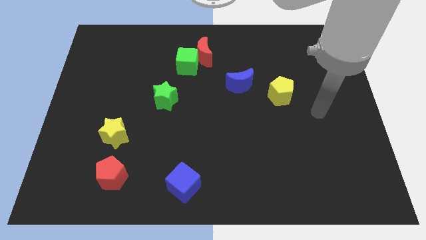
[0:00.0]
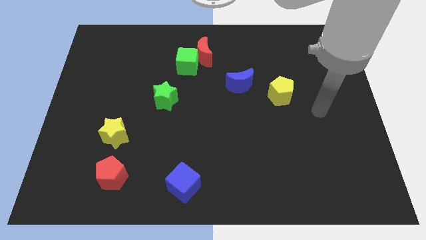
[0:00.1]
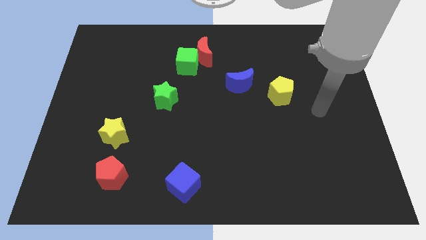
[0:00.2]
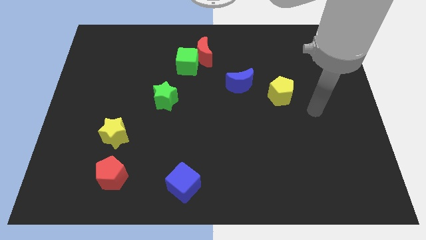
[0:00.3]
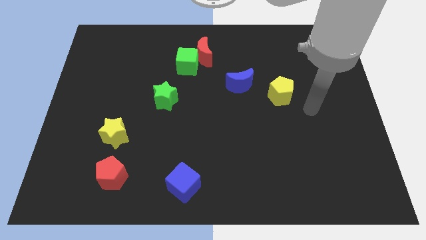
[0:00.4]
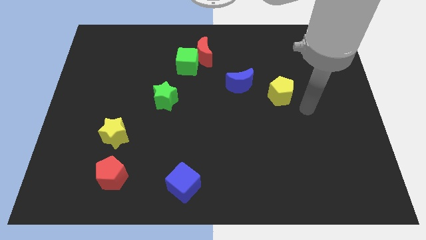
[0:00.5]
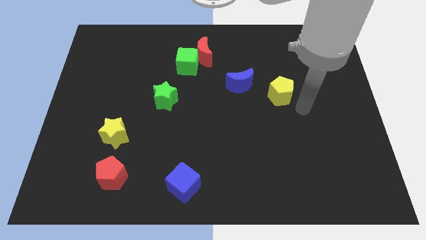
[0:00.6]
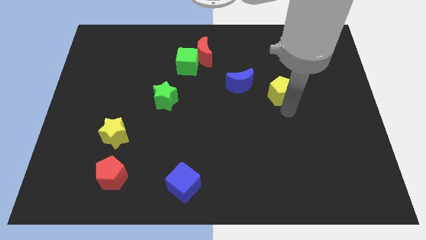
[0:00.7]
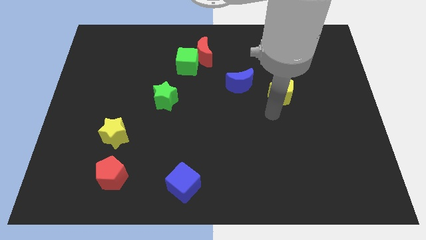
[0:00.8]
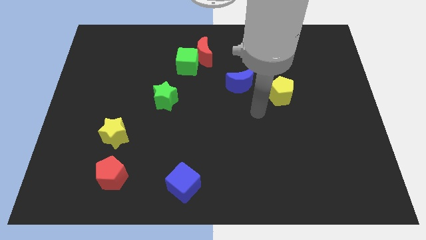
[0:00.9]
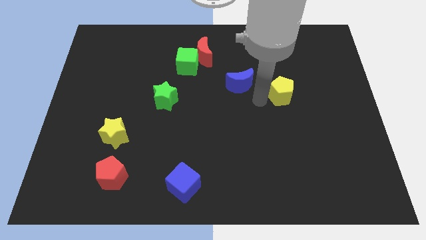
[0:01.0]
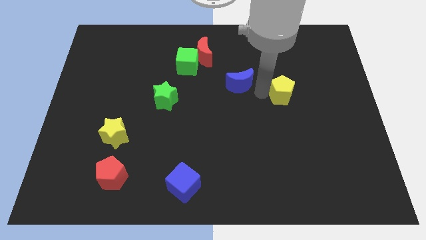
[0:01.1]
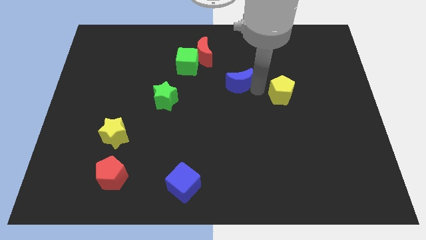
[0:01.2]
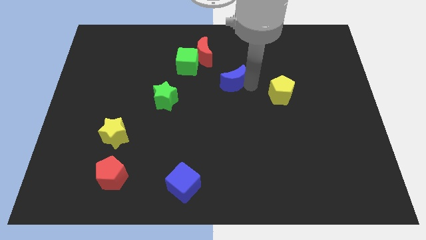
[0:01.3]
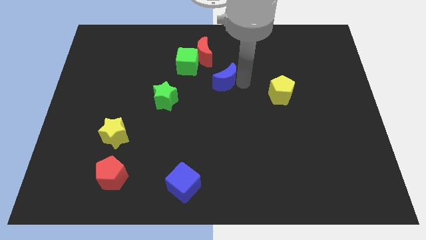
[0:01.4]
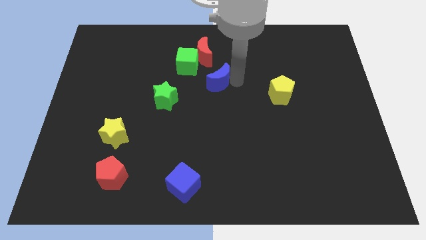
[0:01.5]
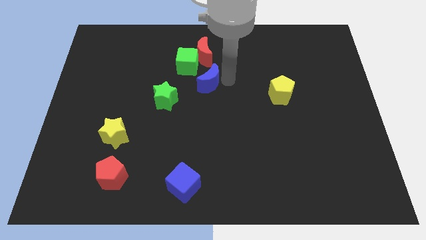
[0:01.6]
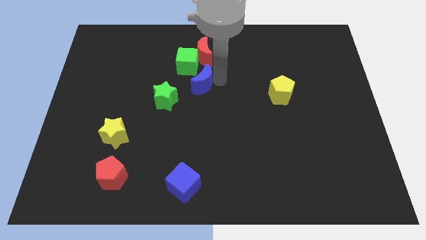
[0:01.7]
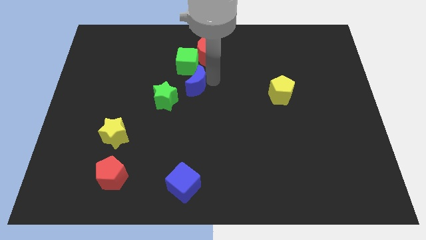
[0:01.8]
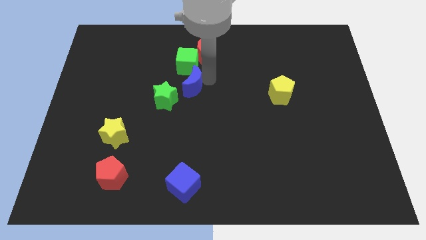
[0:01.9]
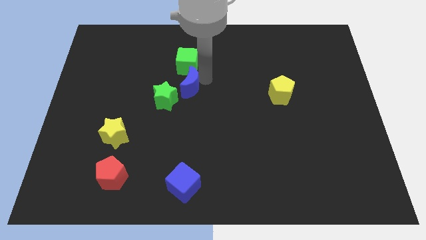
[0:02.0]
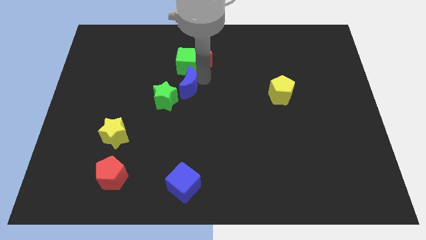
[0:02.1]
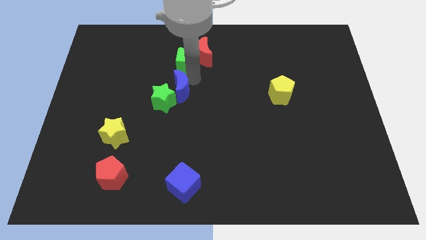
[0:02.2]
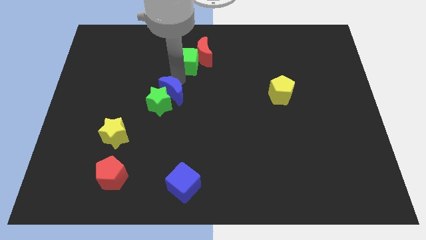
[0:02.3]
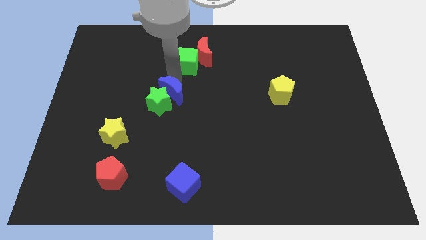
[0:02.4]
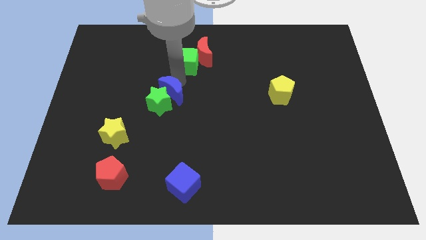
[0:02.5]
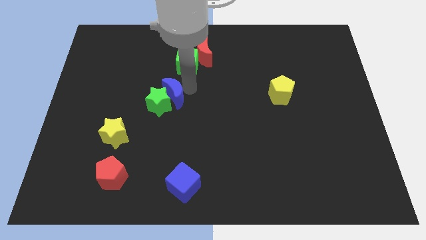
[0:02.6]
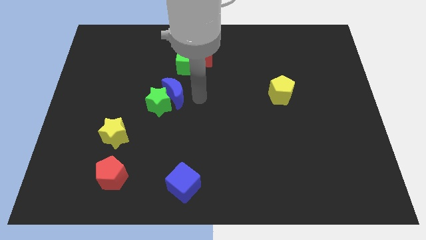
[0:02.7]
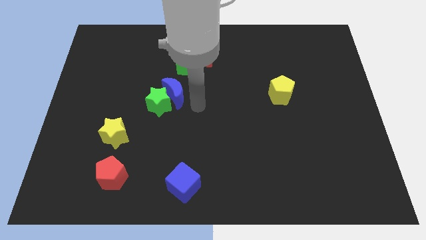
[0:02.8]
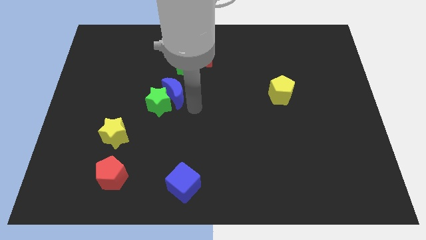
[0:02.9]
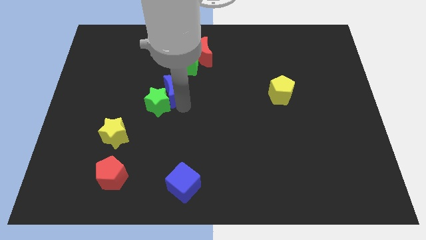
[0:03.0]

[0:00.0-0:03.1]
move blue moon right above green star

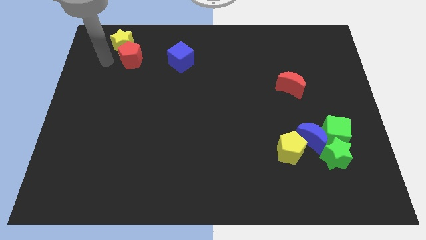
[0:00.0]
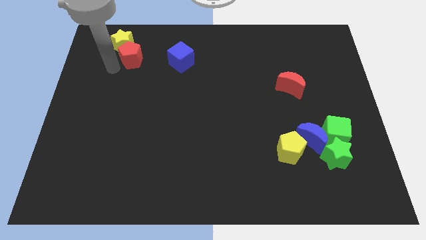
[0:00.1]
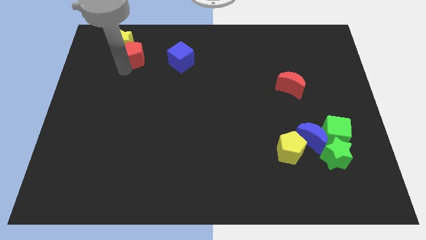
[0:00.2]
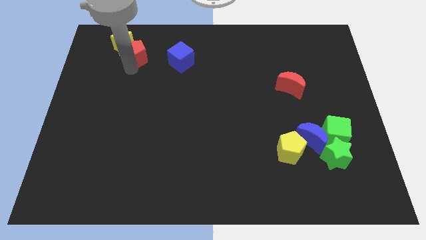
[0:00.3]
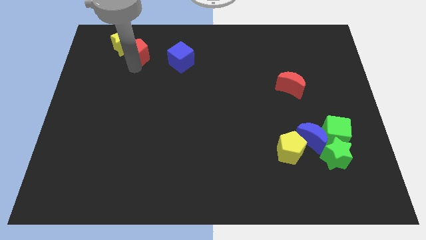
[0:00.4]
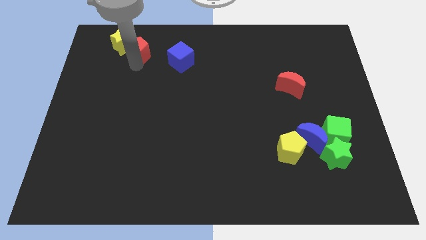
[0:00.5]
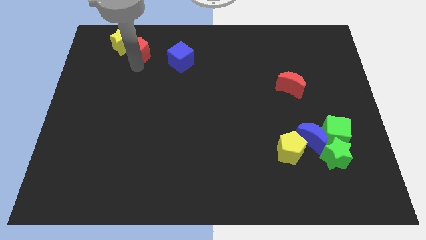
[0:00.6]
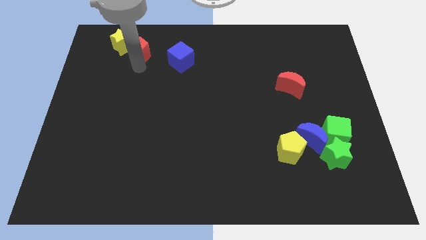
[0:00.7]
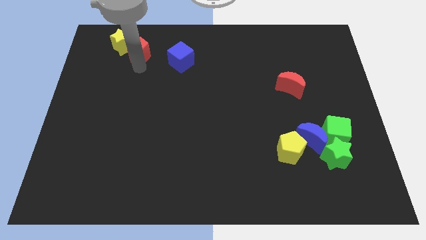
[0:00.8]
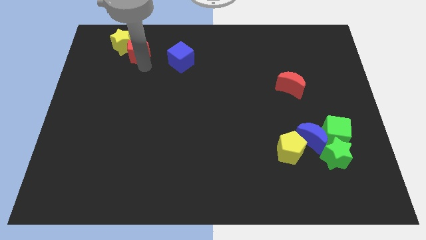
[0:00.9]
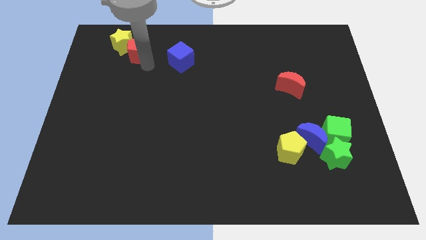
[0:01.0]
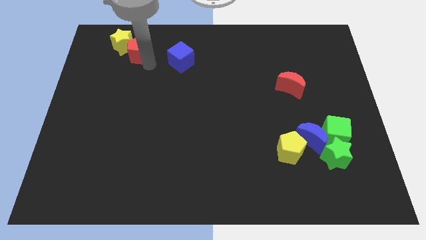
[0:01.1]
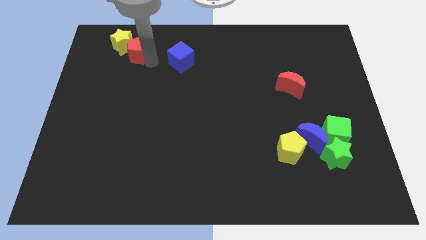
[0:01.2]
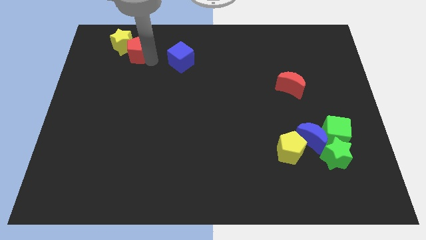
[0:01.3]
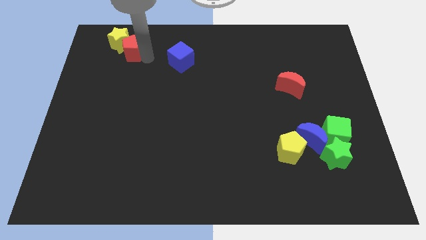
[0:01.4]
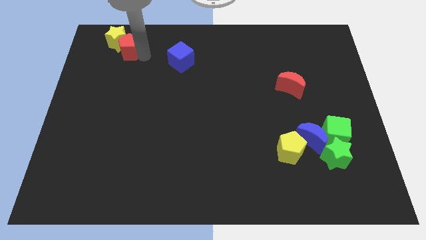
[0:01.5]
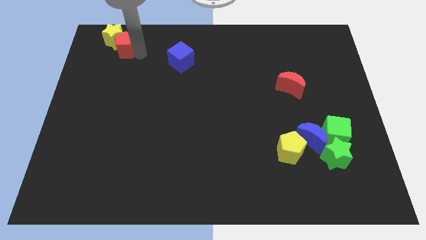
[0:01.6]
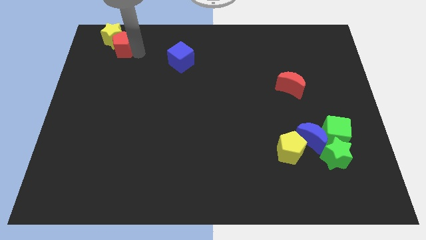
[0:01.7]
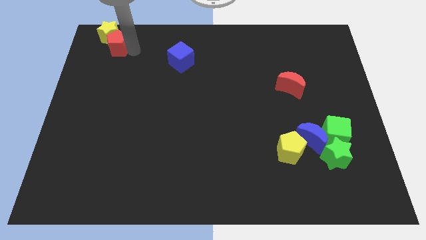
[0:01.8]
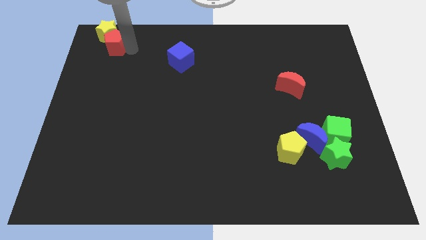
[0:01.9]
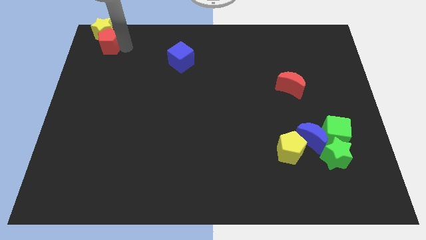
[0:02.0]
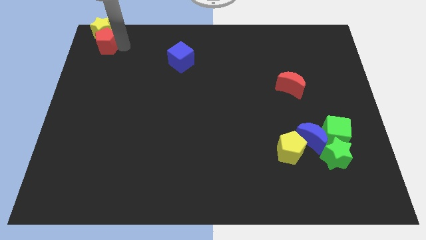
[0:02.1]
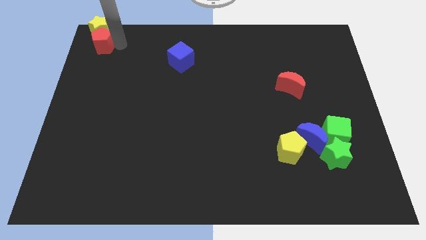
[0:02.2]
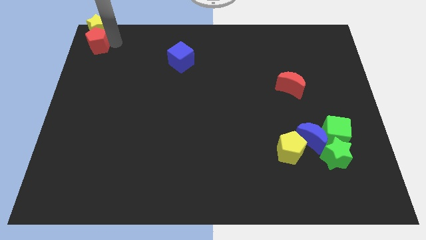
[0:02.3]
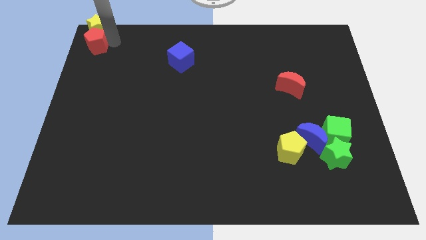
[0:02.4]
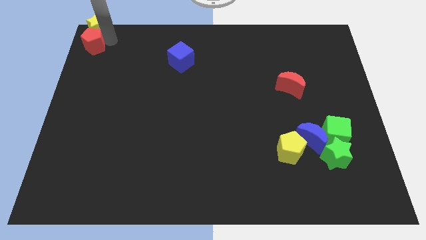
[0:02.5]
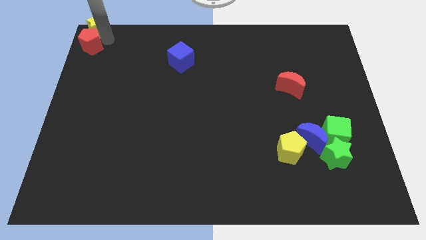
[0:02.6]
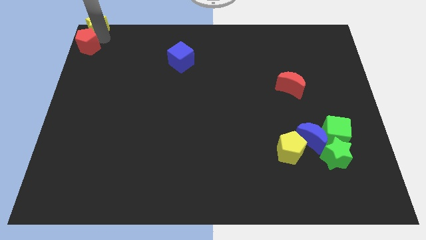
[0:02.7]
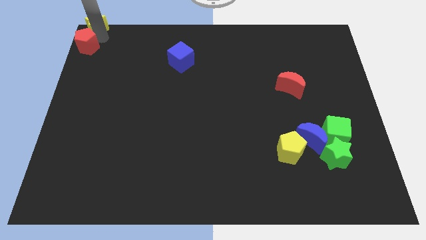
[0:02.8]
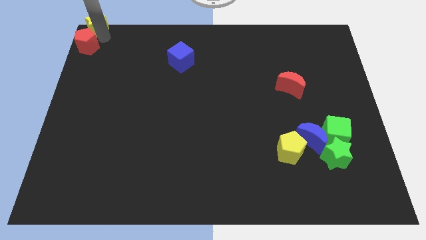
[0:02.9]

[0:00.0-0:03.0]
move the red pentagon along with the yellow star to the top left corner

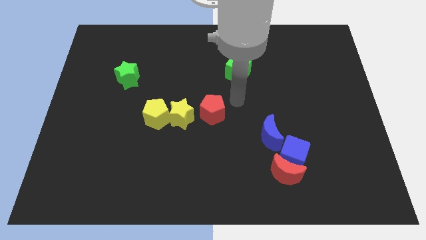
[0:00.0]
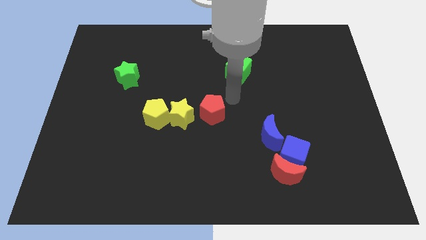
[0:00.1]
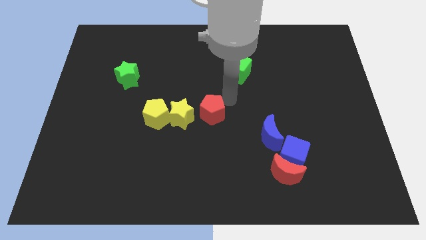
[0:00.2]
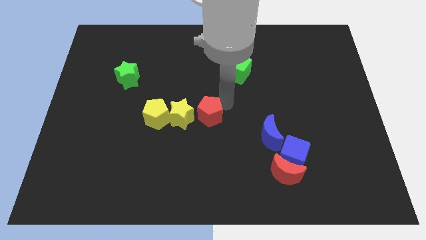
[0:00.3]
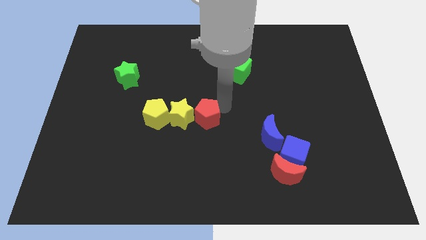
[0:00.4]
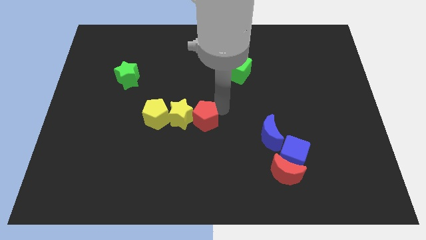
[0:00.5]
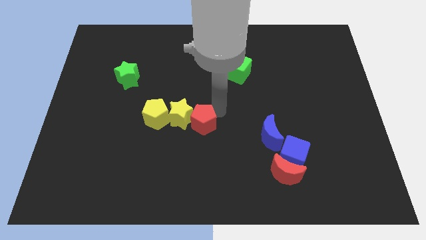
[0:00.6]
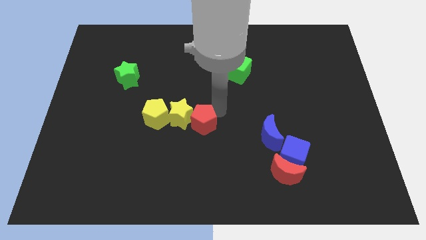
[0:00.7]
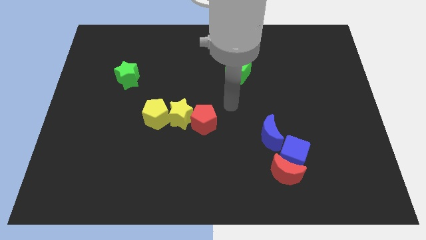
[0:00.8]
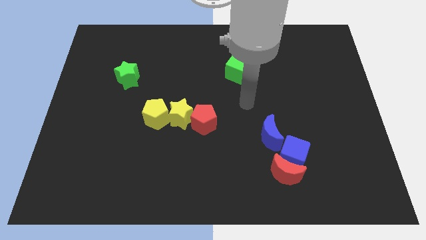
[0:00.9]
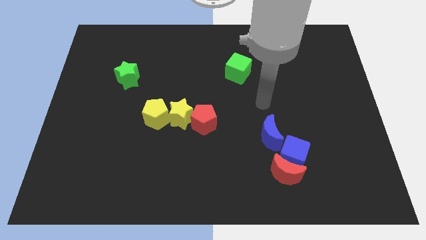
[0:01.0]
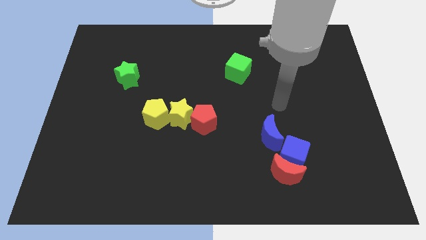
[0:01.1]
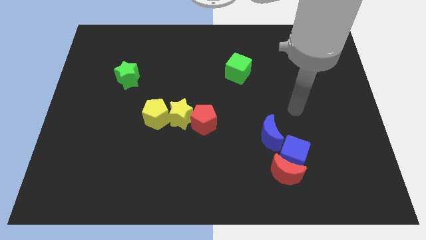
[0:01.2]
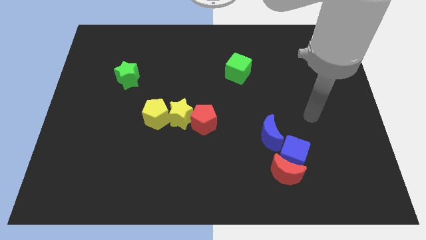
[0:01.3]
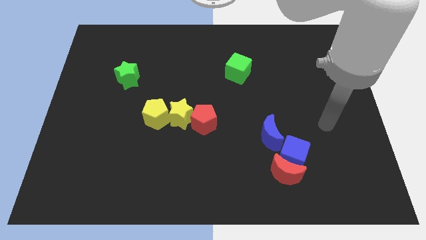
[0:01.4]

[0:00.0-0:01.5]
slide your arm away from red pentagon

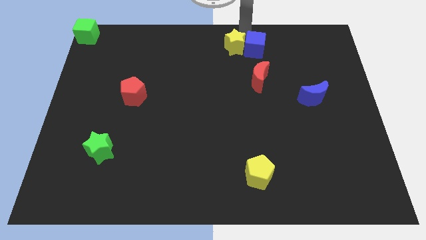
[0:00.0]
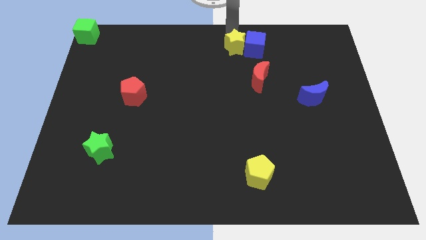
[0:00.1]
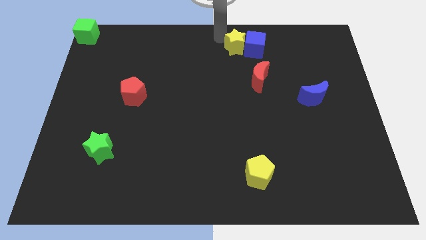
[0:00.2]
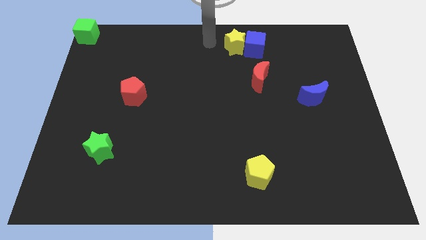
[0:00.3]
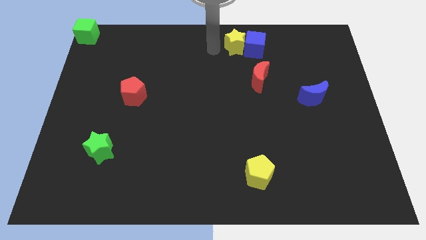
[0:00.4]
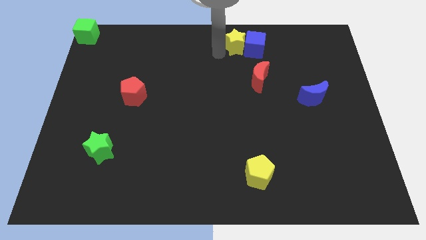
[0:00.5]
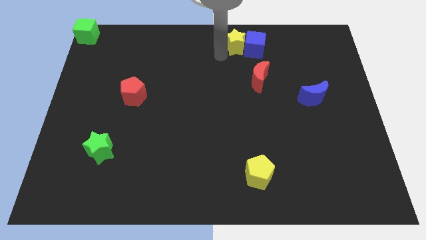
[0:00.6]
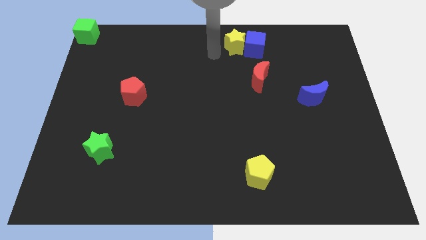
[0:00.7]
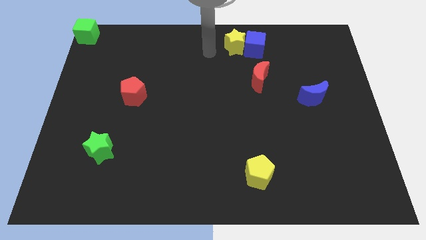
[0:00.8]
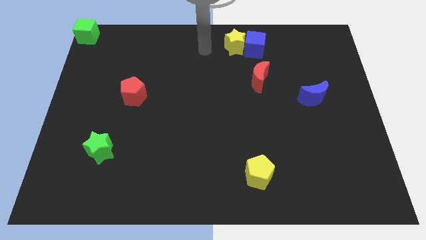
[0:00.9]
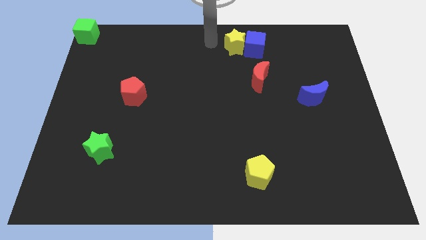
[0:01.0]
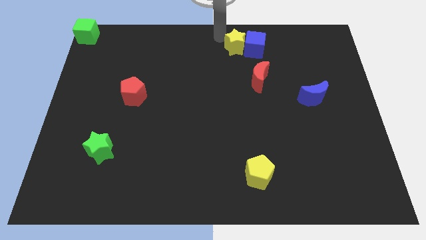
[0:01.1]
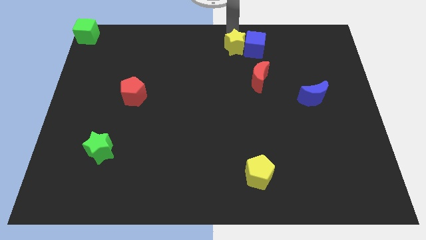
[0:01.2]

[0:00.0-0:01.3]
move yellow star towards red half moon
